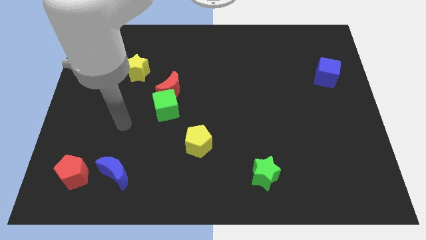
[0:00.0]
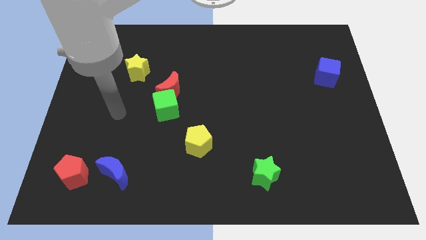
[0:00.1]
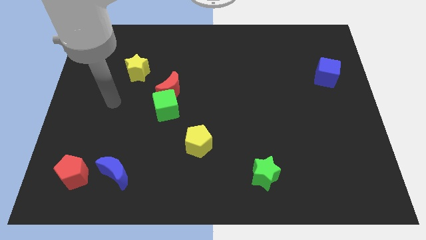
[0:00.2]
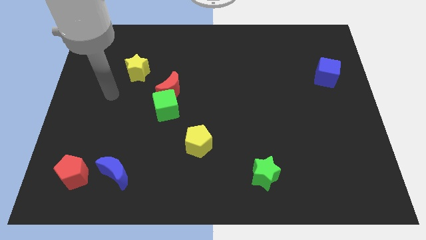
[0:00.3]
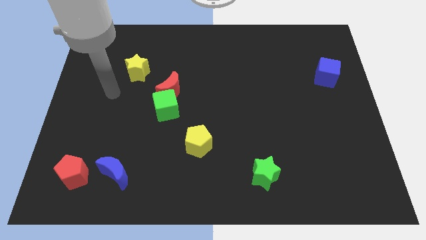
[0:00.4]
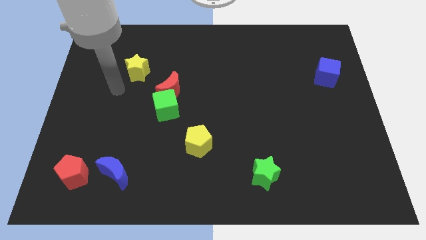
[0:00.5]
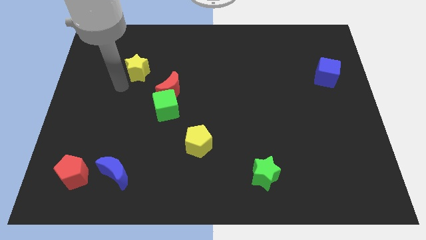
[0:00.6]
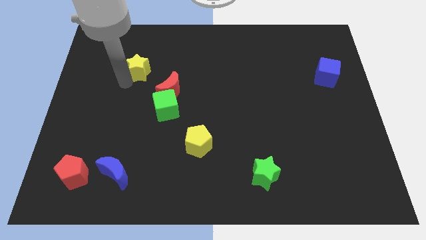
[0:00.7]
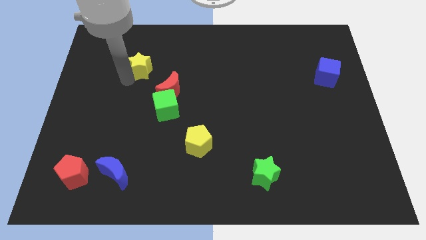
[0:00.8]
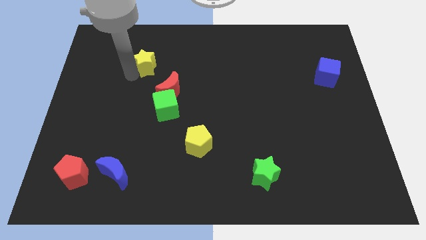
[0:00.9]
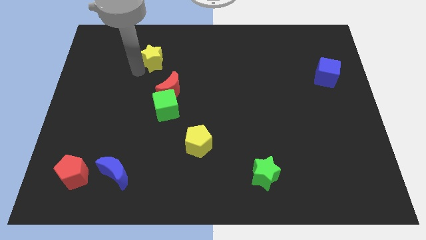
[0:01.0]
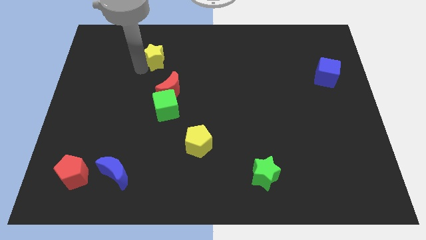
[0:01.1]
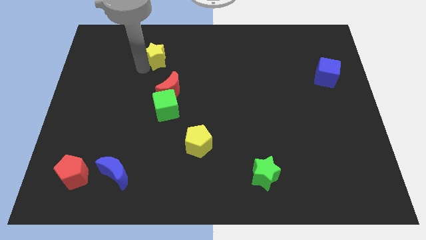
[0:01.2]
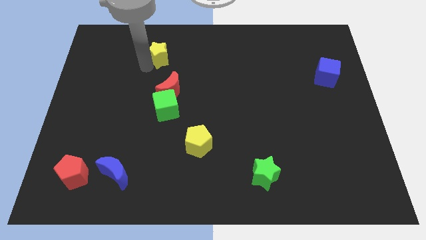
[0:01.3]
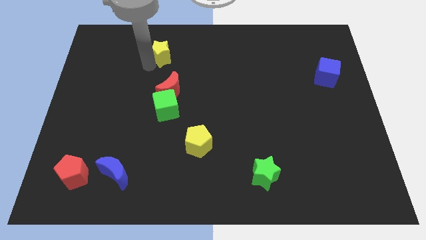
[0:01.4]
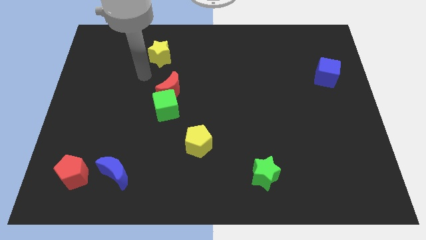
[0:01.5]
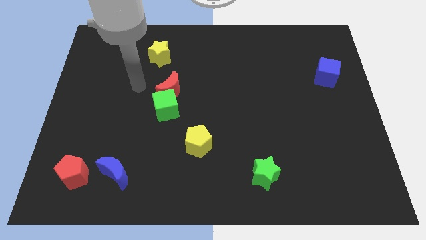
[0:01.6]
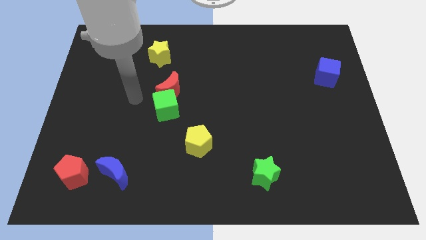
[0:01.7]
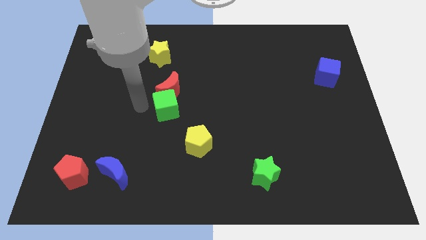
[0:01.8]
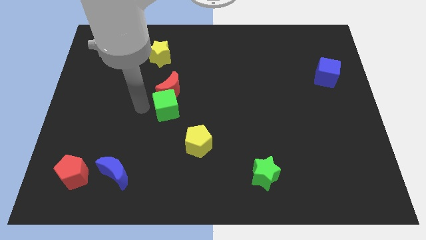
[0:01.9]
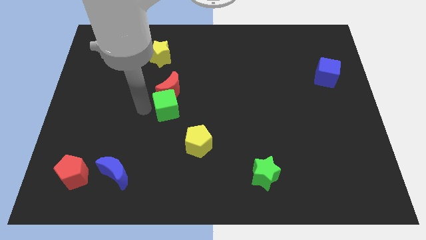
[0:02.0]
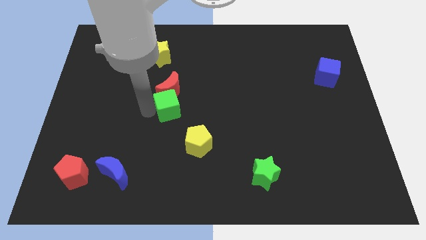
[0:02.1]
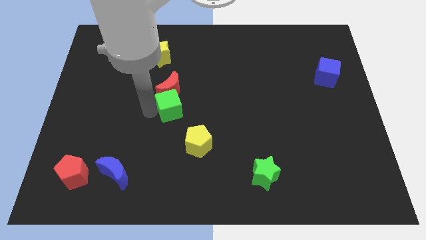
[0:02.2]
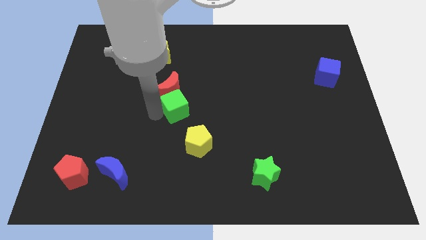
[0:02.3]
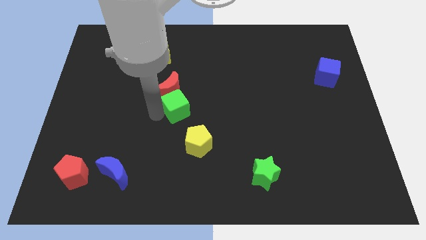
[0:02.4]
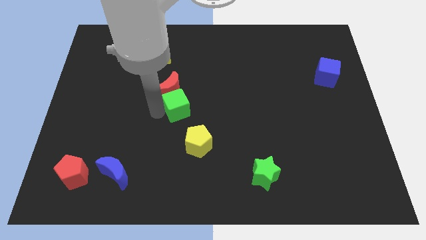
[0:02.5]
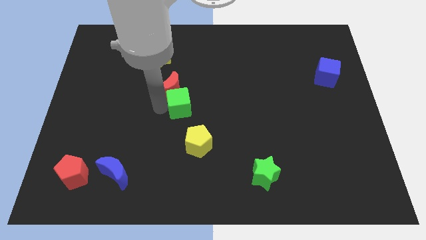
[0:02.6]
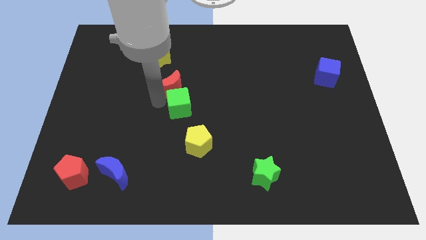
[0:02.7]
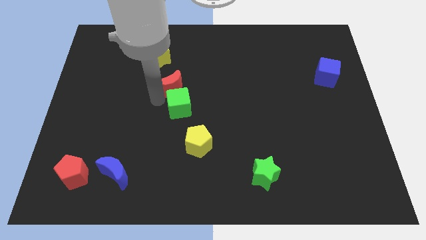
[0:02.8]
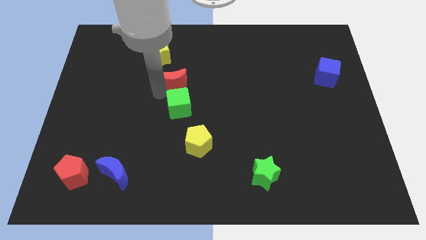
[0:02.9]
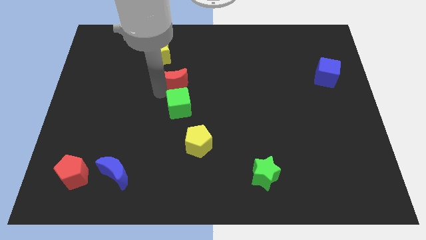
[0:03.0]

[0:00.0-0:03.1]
adjust yellow star red moon and green cube to make a line

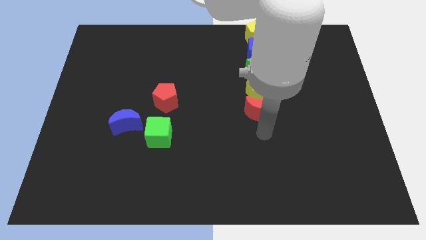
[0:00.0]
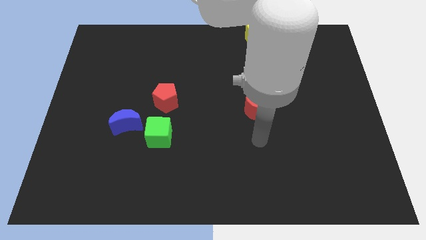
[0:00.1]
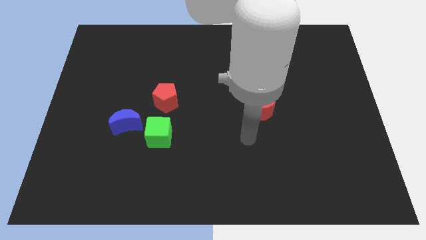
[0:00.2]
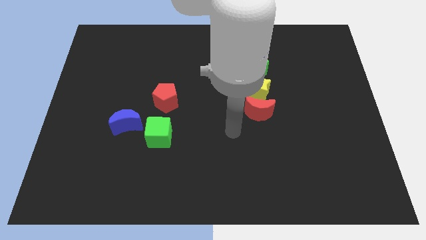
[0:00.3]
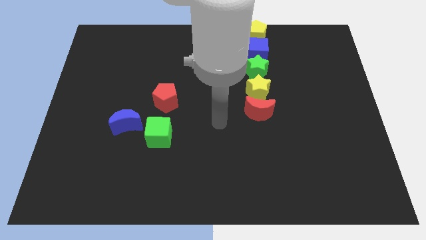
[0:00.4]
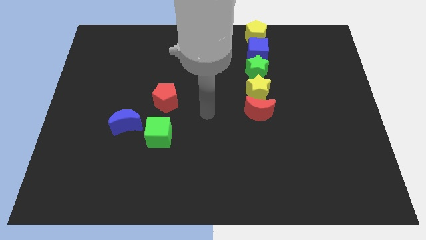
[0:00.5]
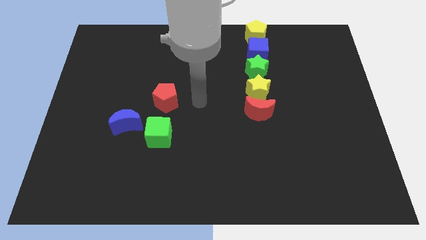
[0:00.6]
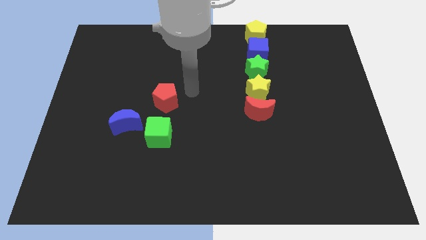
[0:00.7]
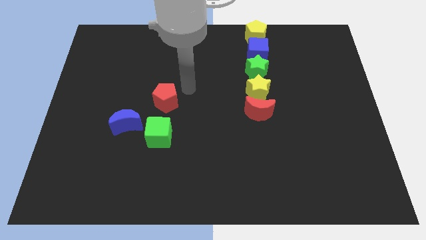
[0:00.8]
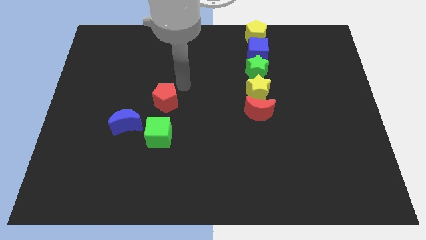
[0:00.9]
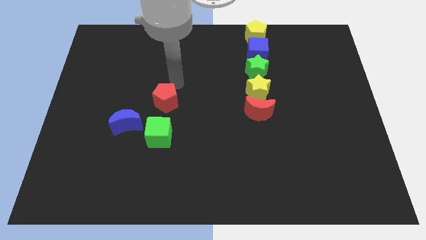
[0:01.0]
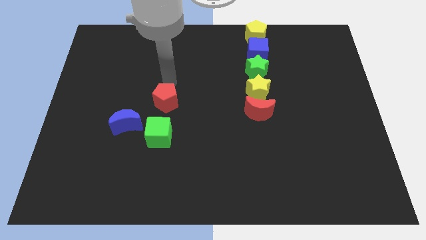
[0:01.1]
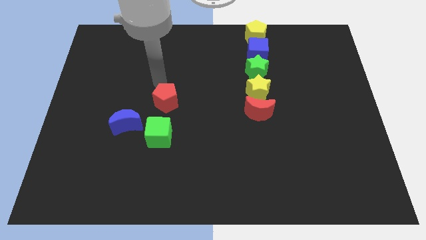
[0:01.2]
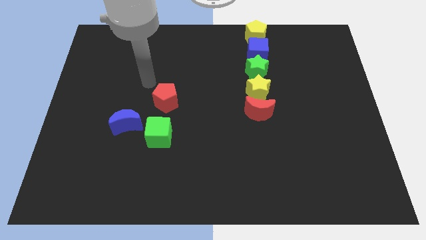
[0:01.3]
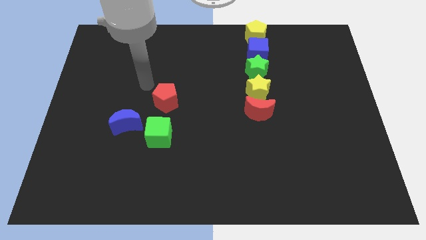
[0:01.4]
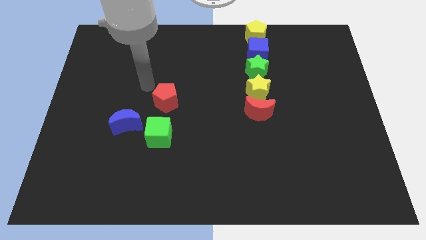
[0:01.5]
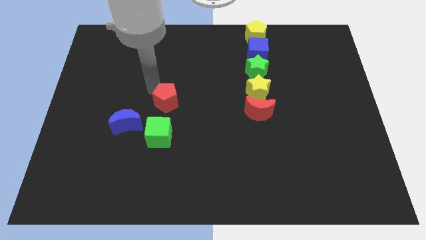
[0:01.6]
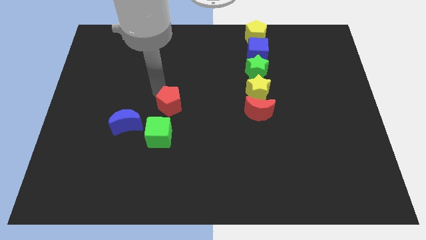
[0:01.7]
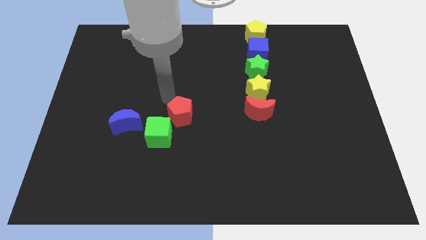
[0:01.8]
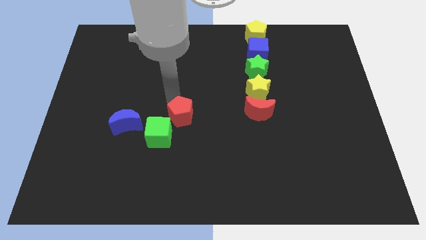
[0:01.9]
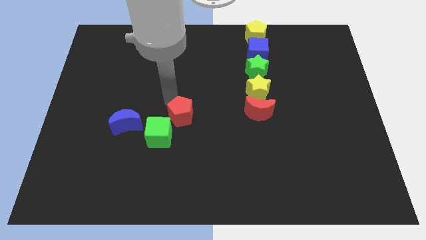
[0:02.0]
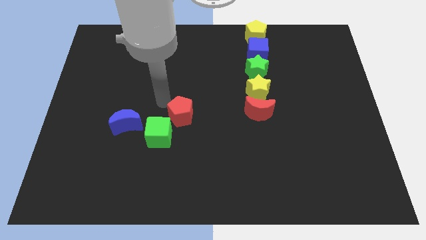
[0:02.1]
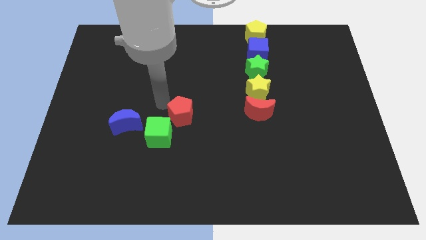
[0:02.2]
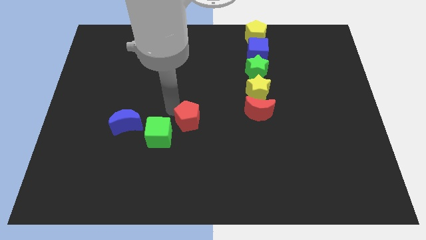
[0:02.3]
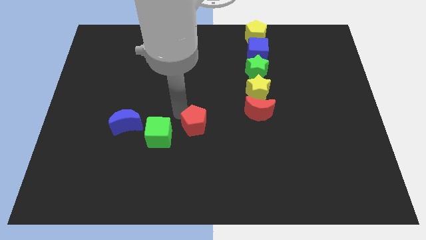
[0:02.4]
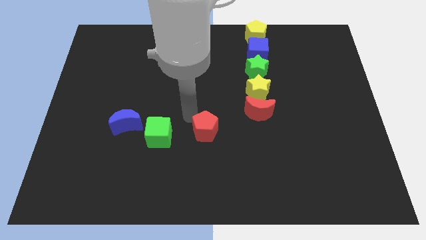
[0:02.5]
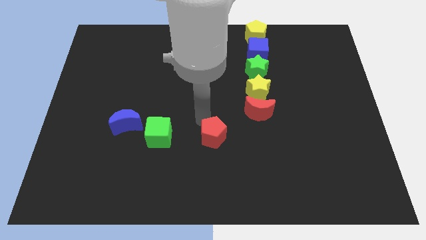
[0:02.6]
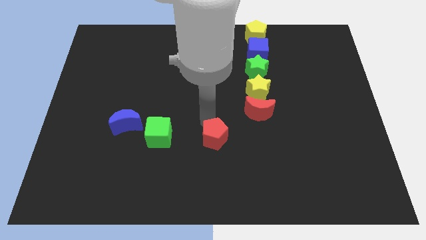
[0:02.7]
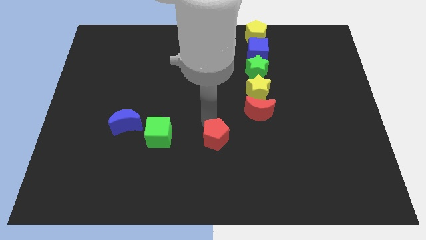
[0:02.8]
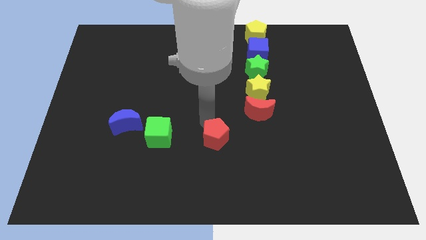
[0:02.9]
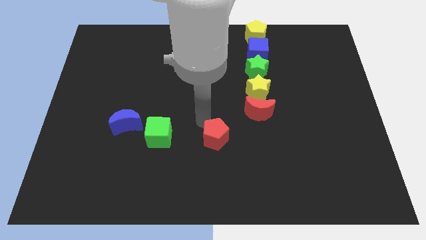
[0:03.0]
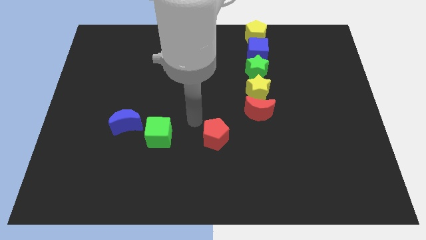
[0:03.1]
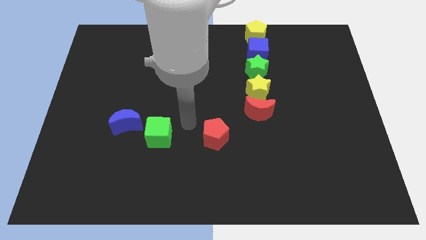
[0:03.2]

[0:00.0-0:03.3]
place the red pentagon to the right of the green cube

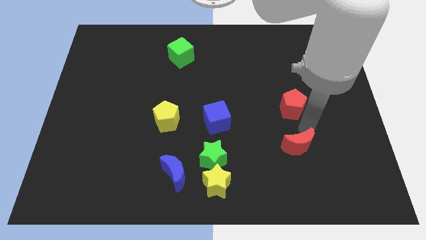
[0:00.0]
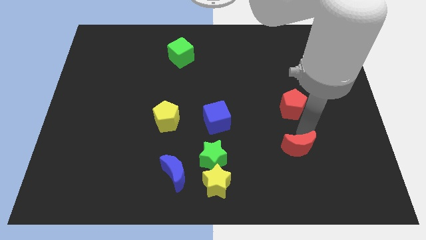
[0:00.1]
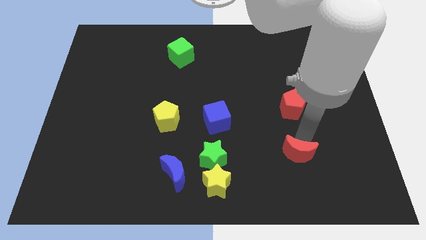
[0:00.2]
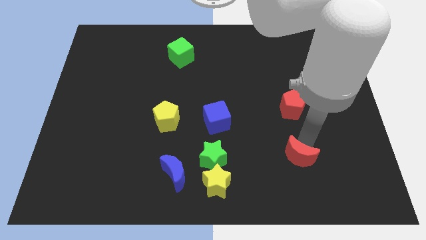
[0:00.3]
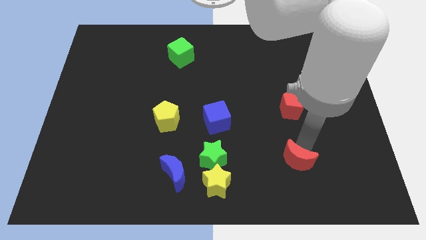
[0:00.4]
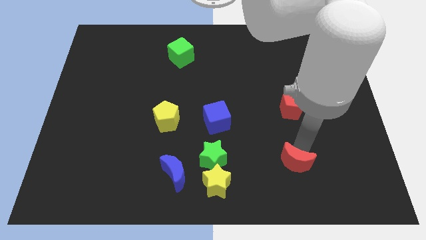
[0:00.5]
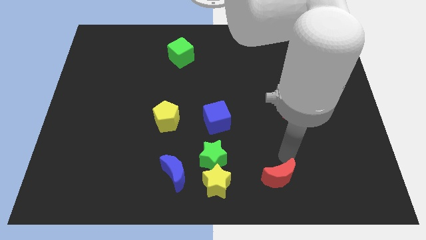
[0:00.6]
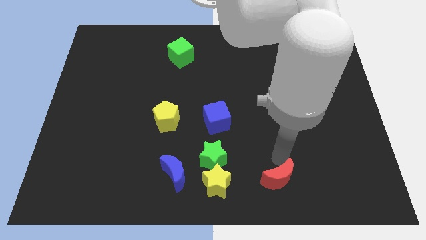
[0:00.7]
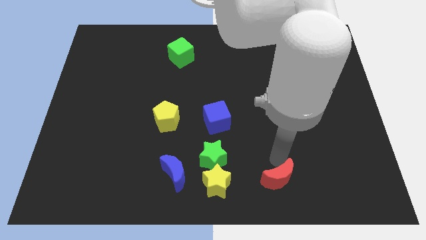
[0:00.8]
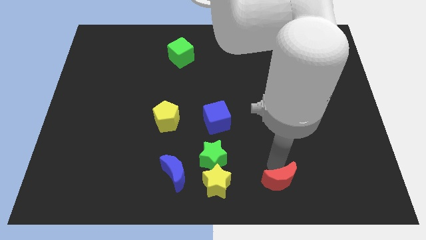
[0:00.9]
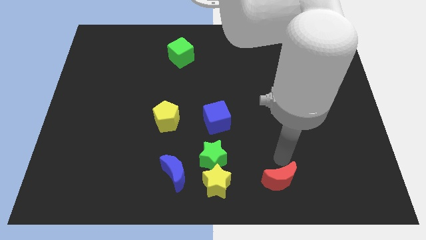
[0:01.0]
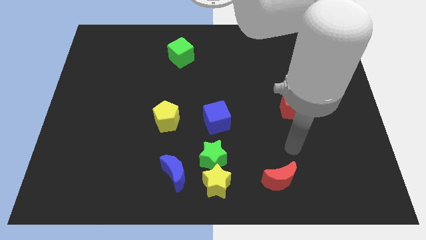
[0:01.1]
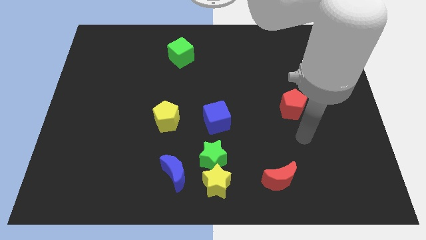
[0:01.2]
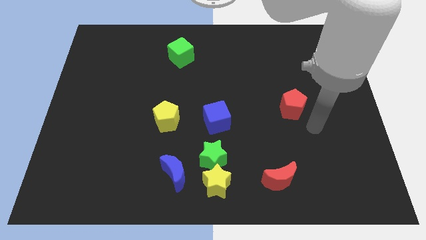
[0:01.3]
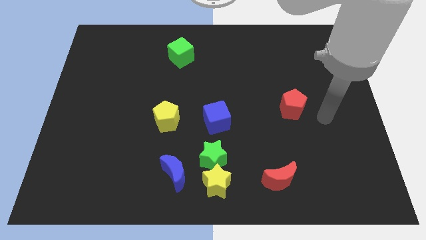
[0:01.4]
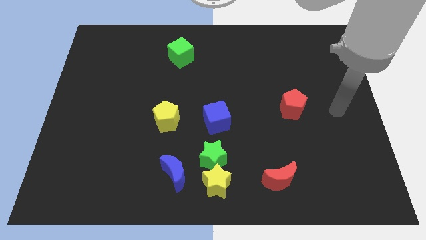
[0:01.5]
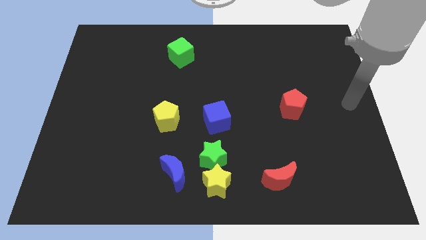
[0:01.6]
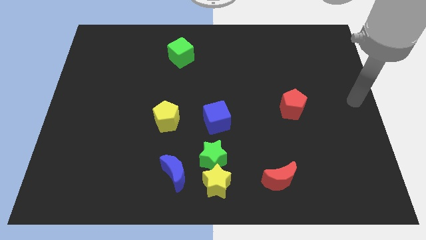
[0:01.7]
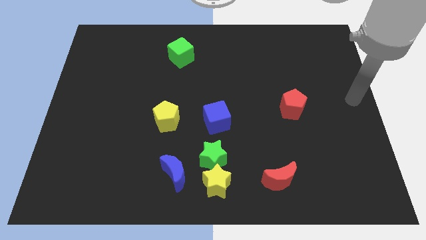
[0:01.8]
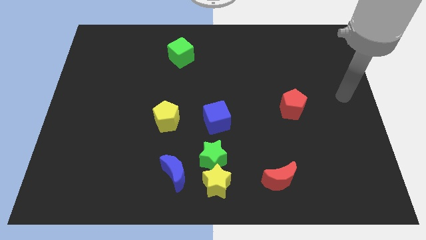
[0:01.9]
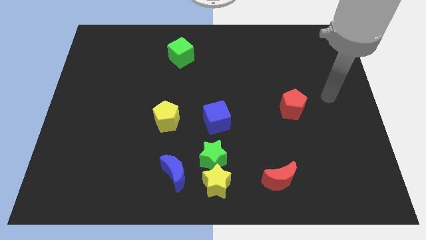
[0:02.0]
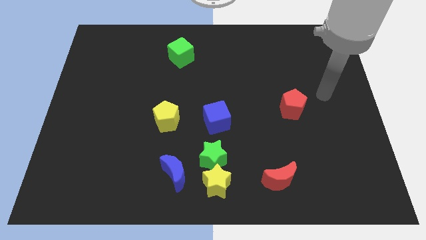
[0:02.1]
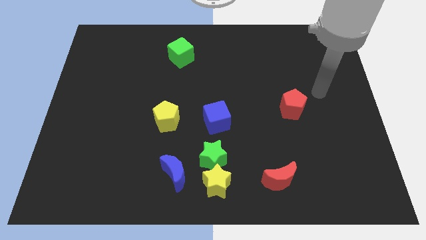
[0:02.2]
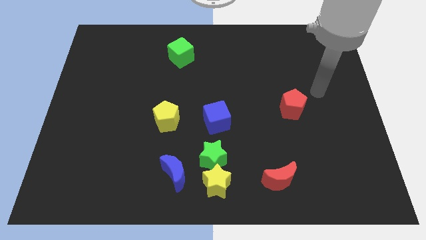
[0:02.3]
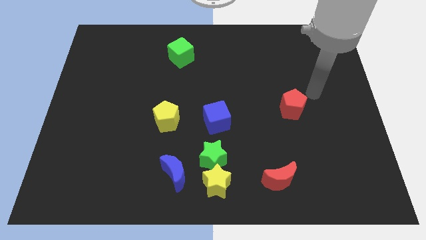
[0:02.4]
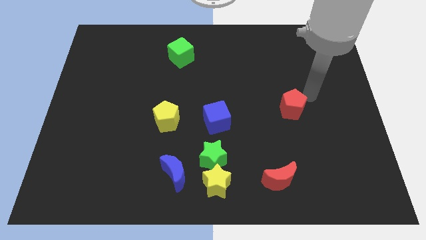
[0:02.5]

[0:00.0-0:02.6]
push the red crescent to the bottom side of the board
